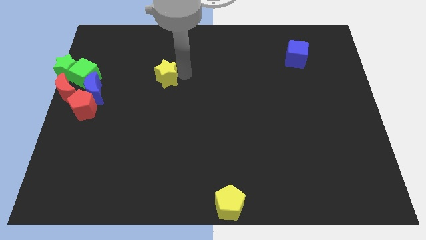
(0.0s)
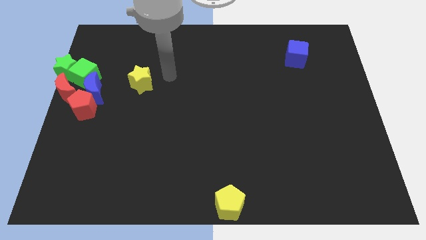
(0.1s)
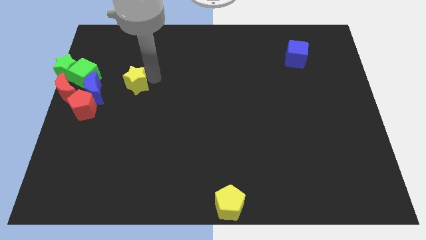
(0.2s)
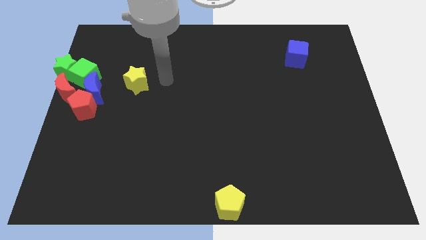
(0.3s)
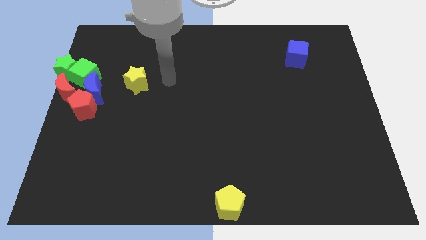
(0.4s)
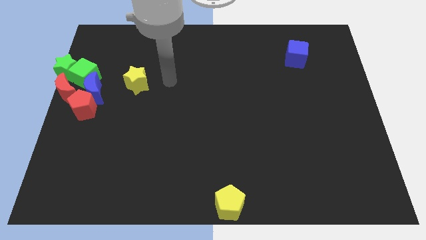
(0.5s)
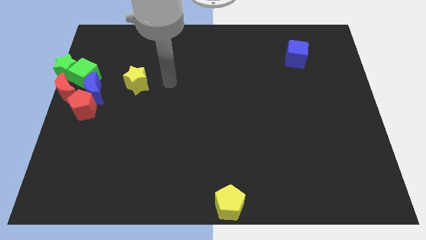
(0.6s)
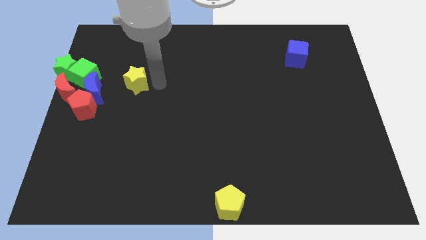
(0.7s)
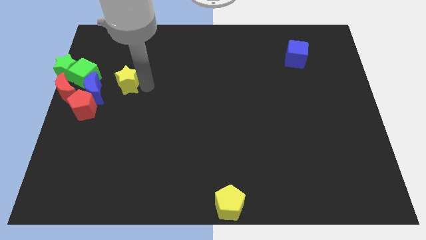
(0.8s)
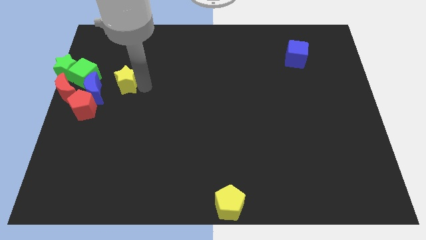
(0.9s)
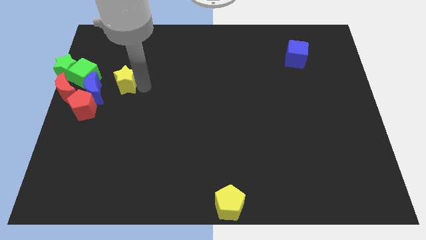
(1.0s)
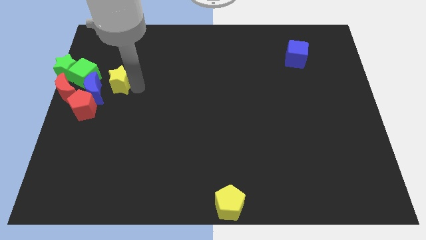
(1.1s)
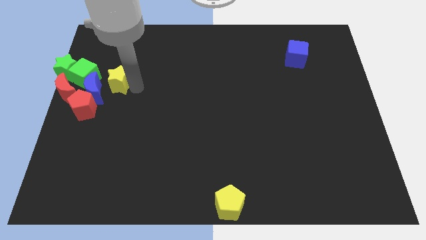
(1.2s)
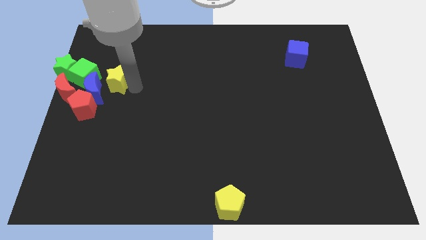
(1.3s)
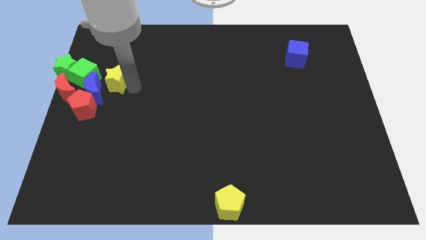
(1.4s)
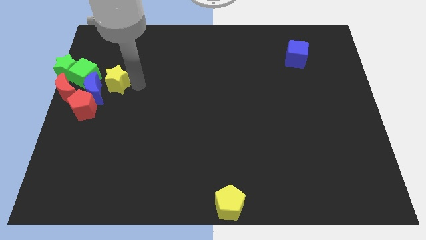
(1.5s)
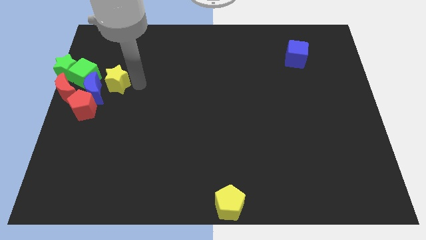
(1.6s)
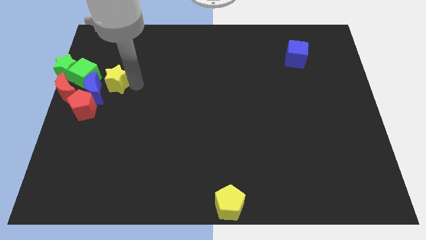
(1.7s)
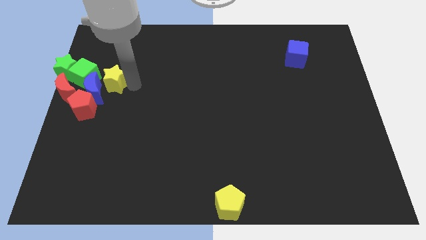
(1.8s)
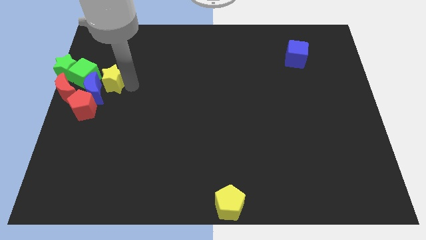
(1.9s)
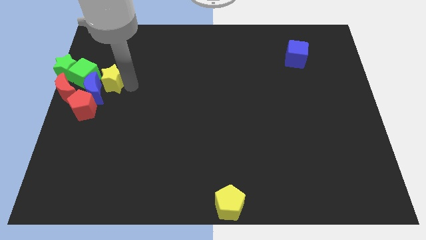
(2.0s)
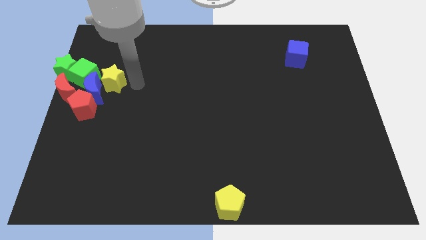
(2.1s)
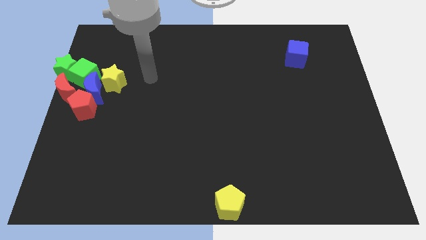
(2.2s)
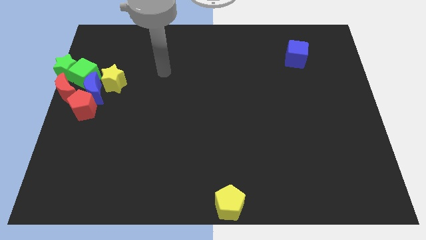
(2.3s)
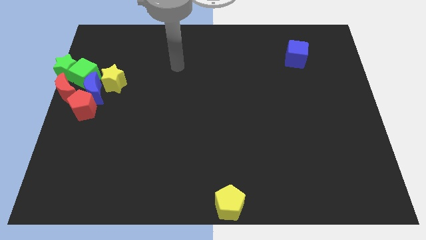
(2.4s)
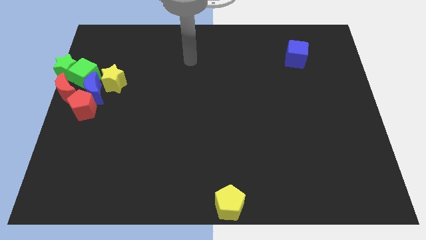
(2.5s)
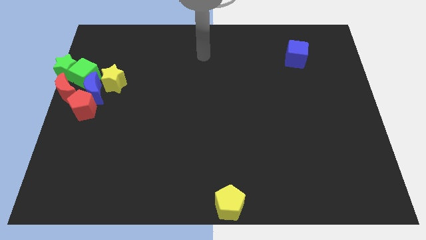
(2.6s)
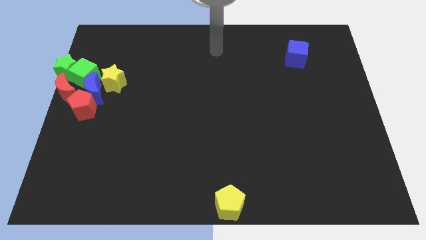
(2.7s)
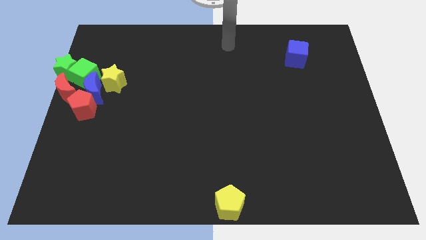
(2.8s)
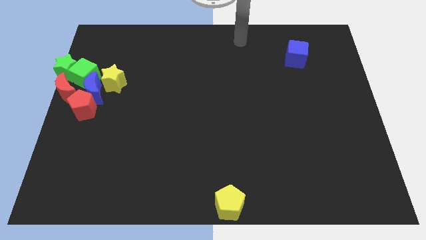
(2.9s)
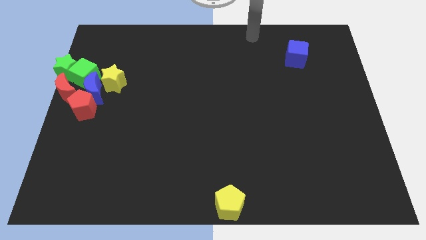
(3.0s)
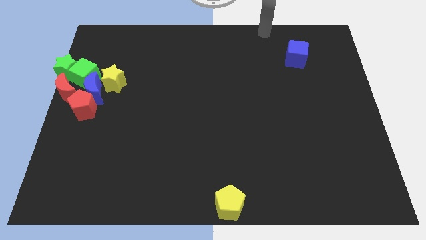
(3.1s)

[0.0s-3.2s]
push the yellow star slightly towards the blue moon

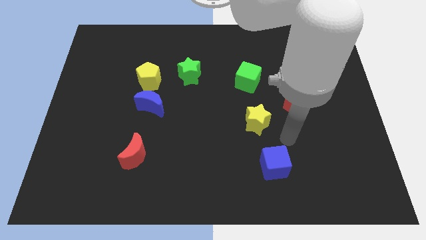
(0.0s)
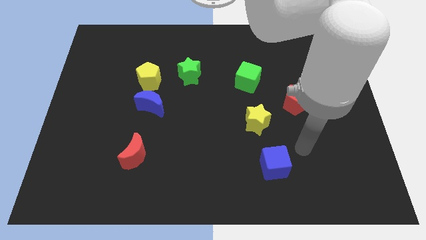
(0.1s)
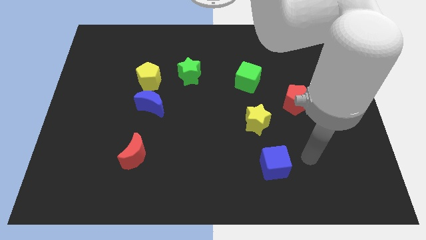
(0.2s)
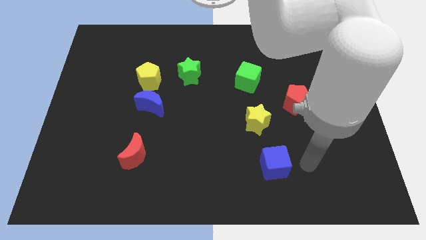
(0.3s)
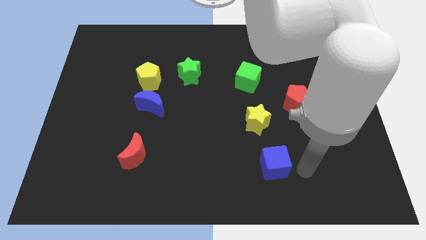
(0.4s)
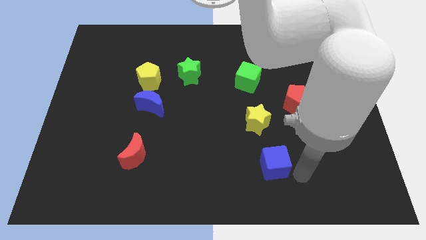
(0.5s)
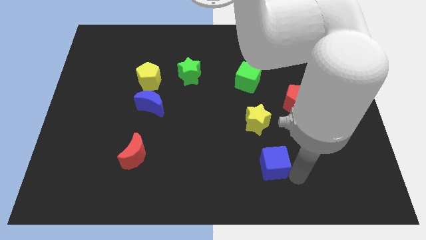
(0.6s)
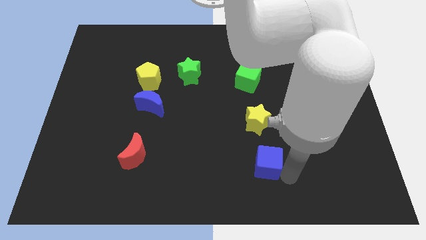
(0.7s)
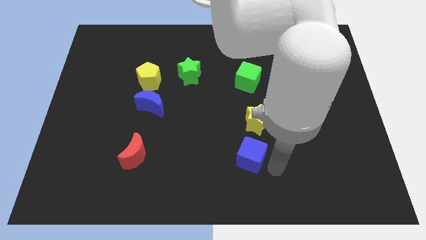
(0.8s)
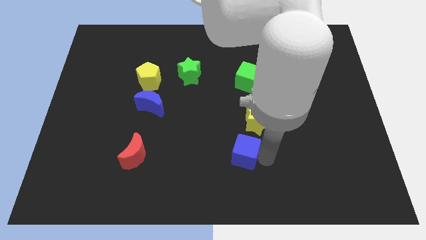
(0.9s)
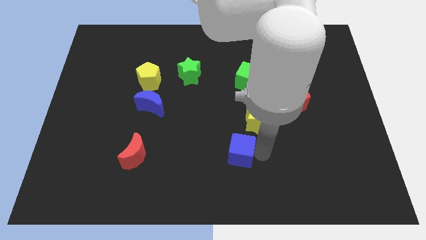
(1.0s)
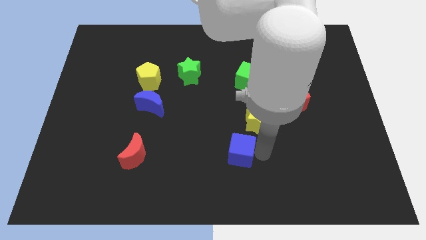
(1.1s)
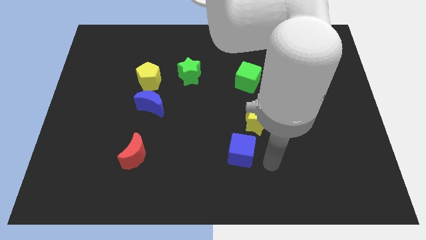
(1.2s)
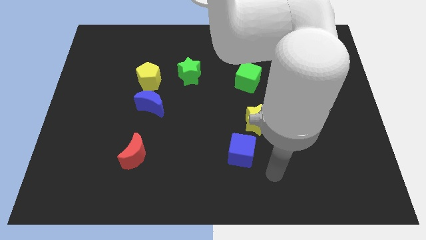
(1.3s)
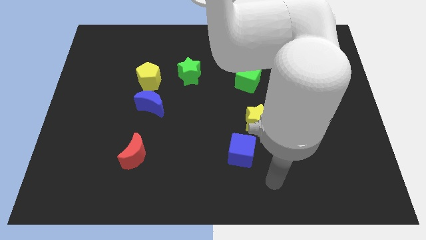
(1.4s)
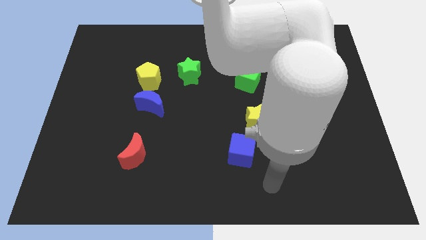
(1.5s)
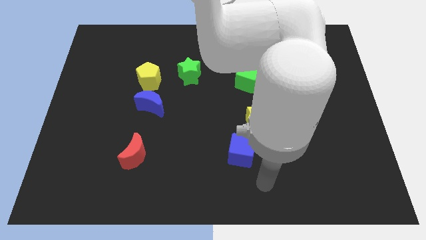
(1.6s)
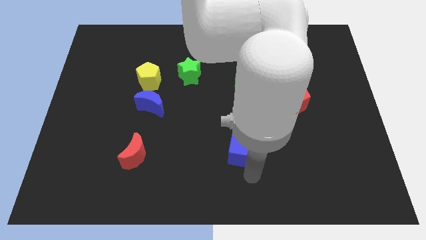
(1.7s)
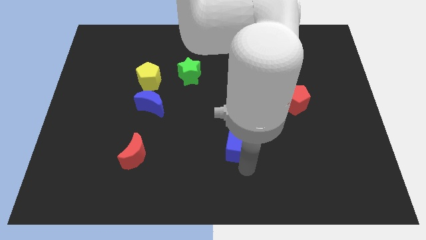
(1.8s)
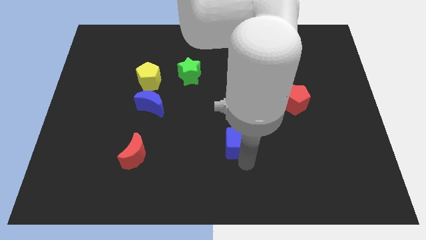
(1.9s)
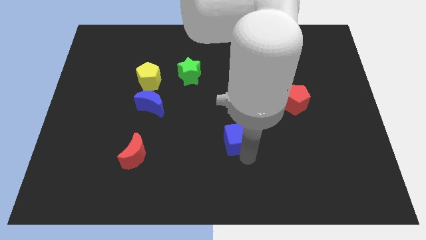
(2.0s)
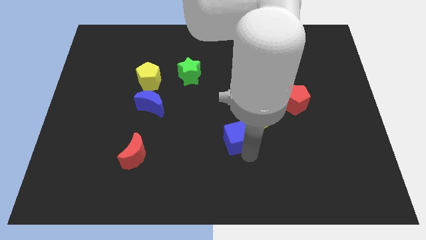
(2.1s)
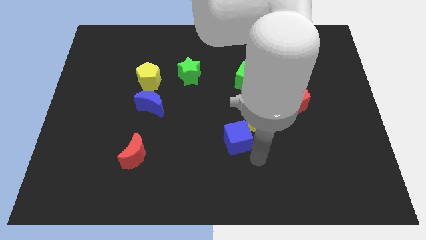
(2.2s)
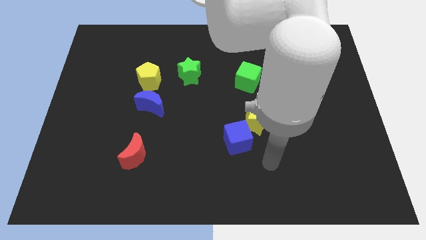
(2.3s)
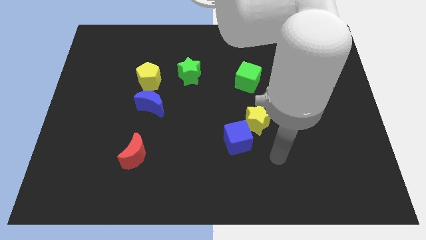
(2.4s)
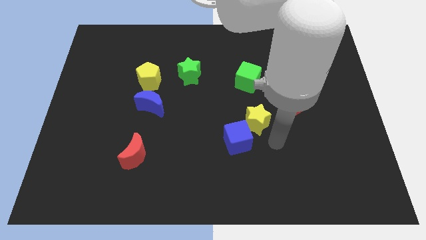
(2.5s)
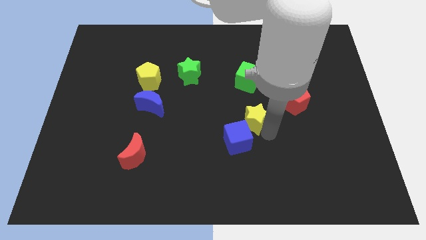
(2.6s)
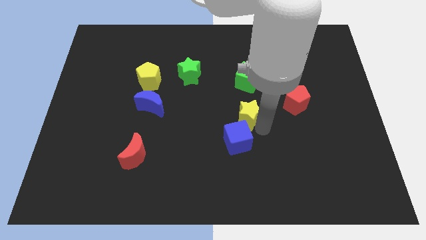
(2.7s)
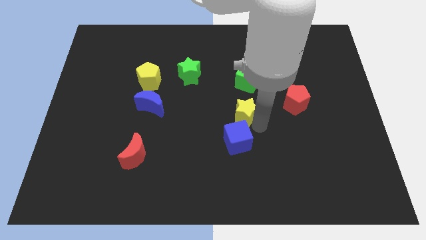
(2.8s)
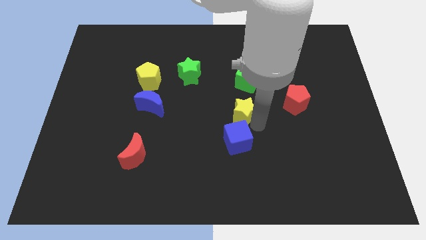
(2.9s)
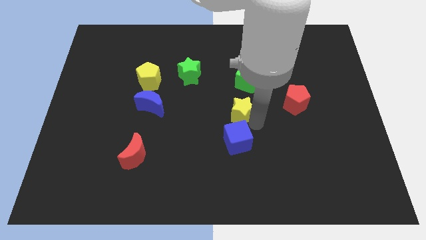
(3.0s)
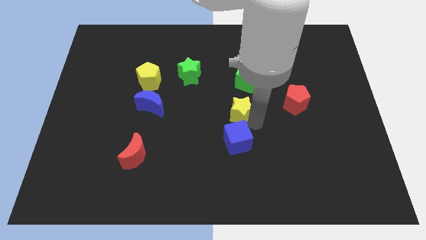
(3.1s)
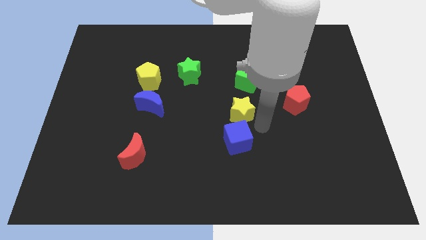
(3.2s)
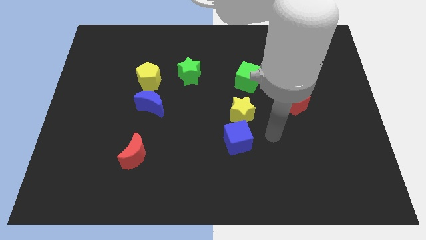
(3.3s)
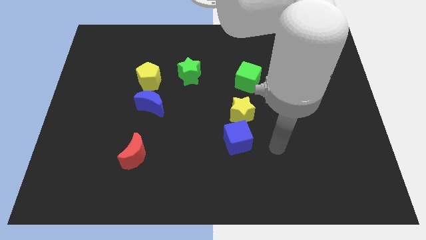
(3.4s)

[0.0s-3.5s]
move the blue cube below the yellow star

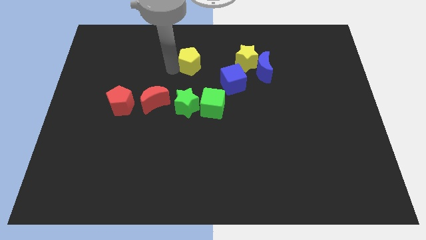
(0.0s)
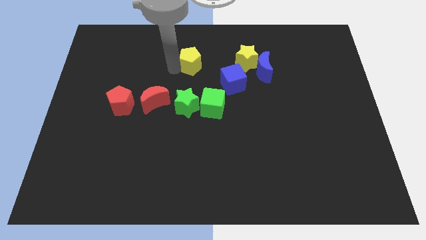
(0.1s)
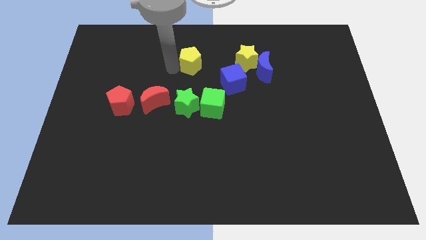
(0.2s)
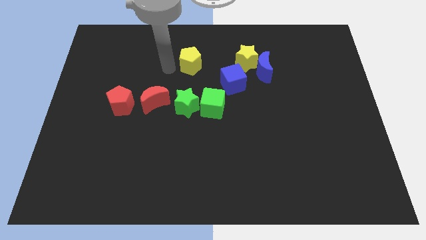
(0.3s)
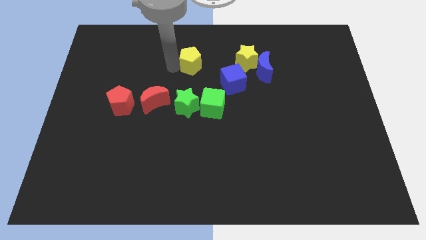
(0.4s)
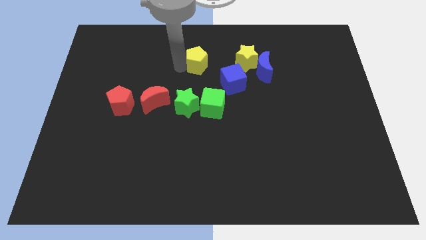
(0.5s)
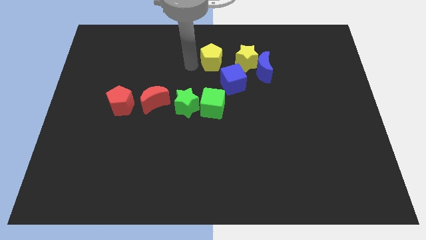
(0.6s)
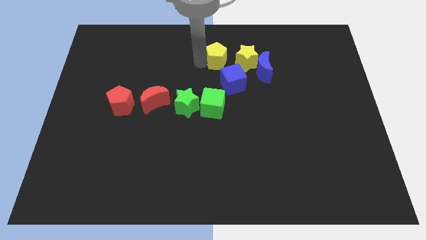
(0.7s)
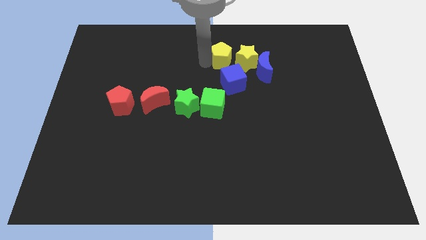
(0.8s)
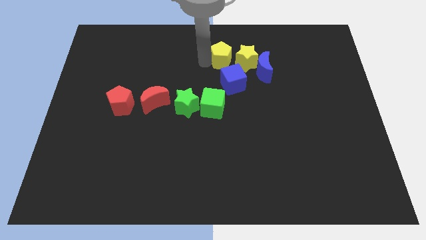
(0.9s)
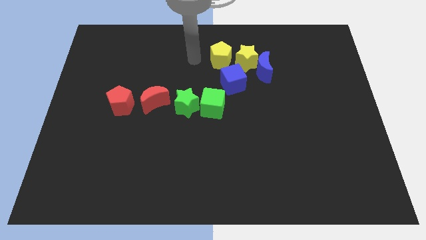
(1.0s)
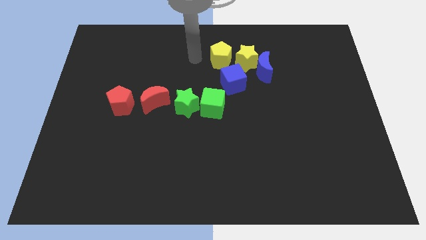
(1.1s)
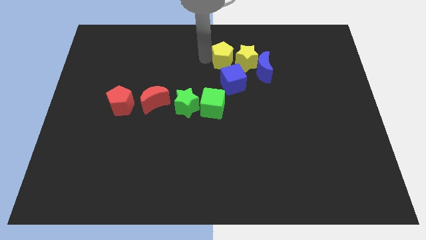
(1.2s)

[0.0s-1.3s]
slide the yellow pentagon to the left of the yellow star

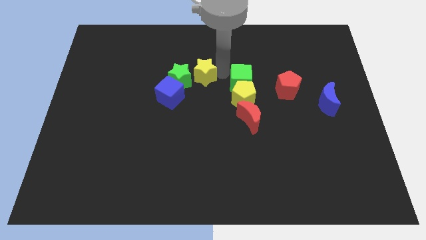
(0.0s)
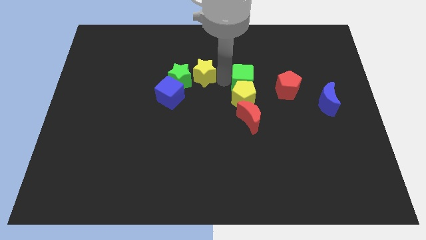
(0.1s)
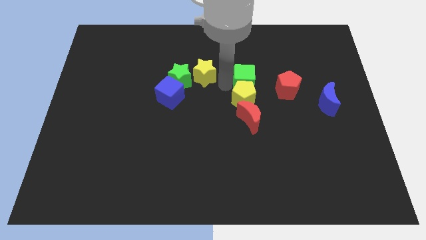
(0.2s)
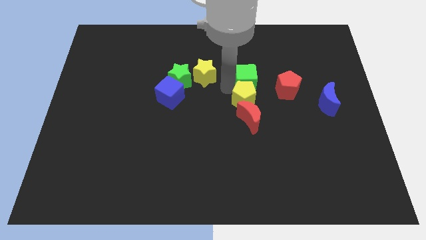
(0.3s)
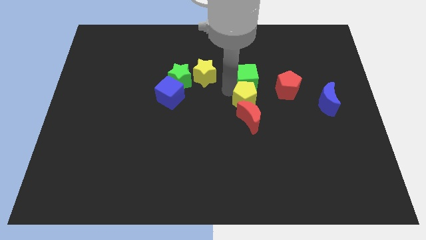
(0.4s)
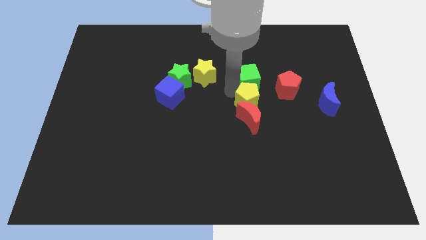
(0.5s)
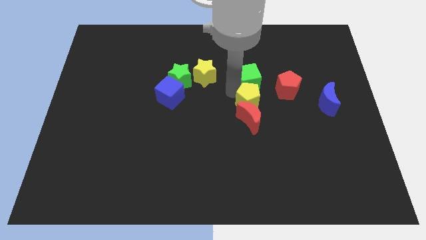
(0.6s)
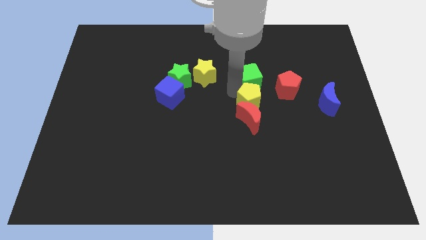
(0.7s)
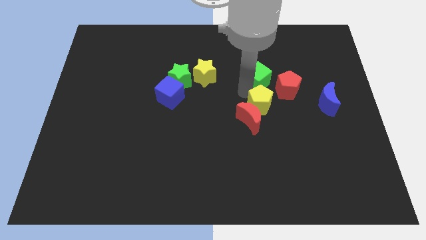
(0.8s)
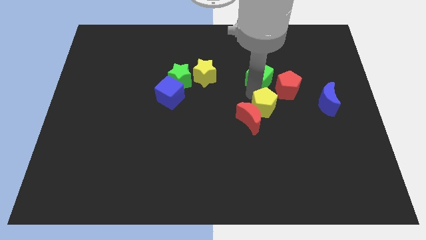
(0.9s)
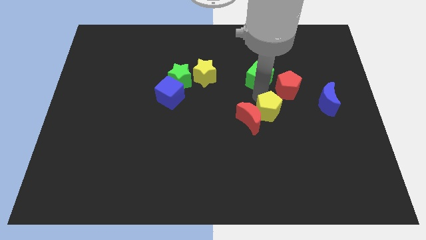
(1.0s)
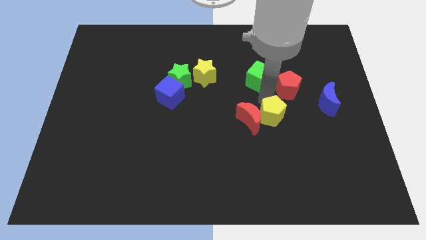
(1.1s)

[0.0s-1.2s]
seperate green cube and yellow pentagon
